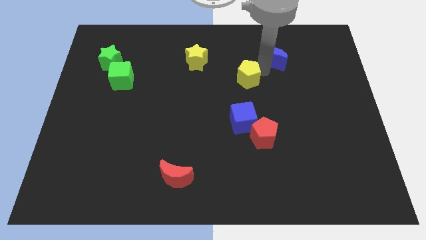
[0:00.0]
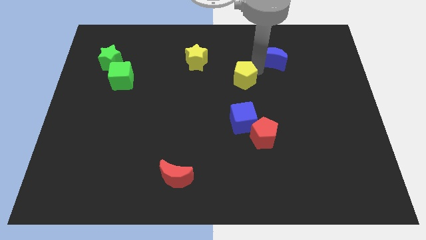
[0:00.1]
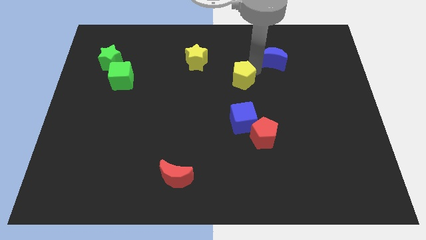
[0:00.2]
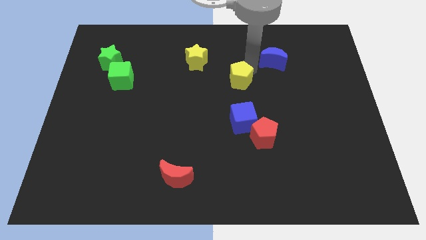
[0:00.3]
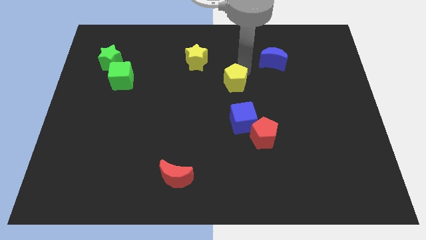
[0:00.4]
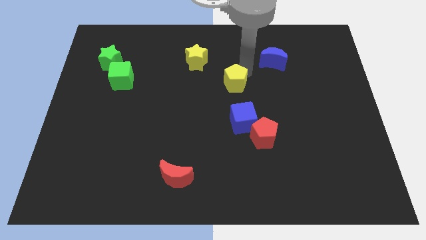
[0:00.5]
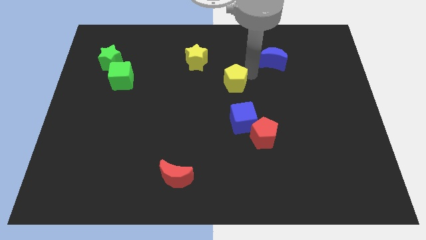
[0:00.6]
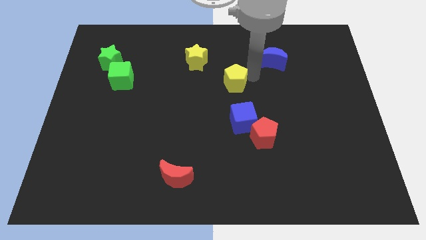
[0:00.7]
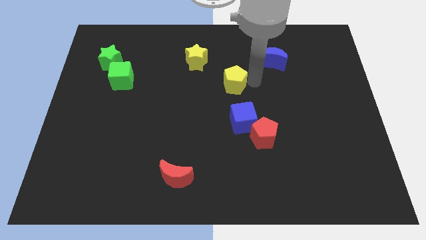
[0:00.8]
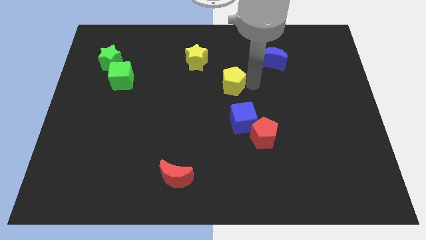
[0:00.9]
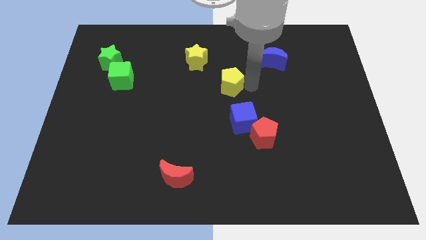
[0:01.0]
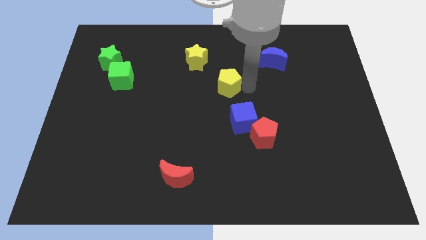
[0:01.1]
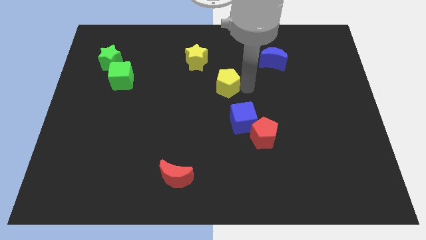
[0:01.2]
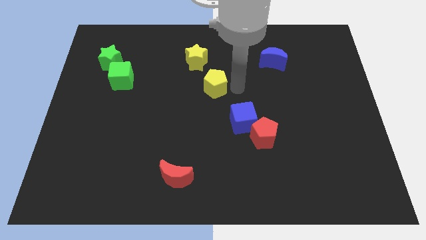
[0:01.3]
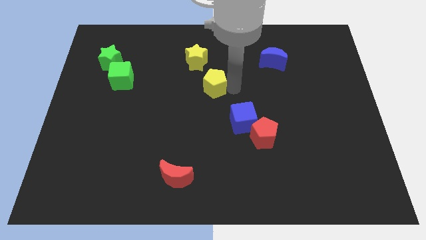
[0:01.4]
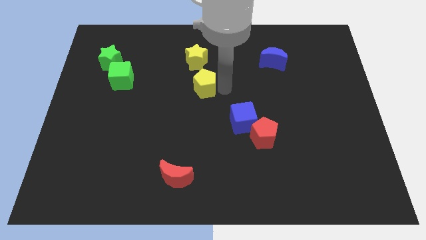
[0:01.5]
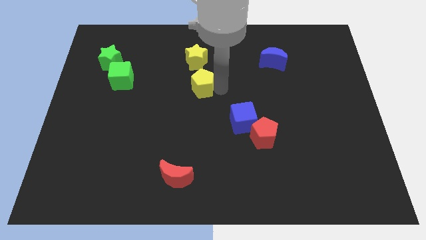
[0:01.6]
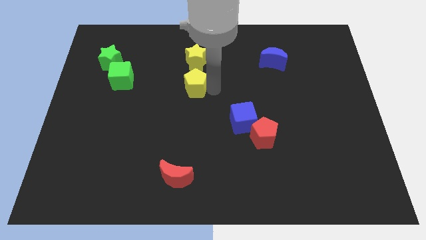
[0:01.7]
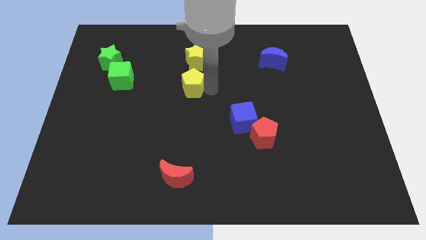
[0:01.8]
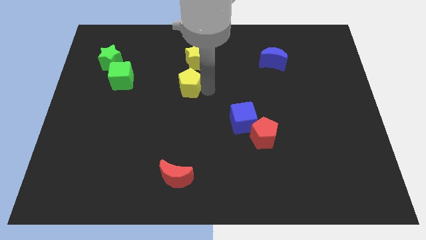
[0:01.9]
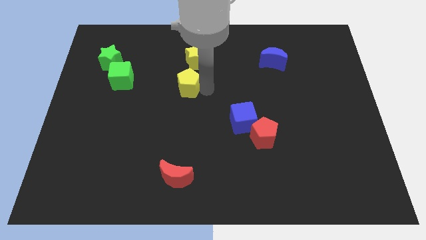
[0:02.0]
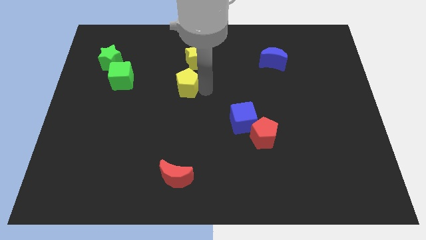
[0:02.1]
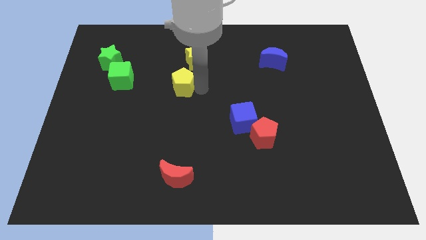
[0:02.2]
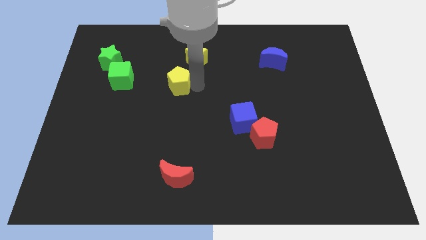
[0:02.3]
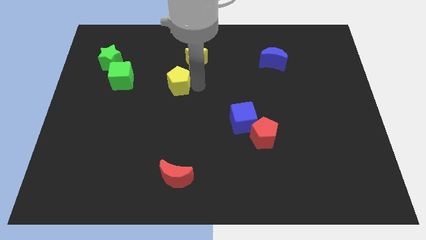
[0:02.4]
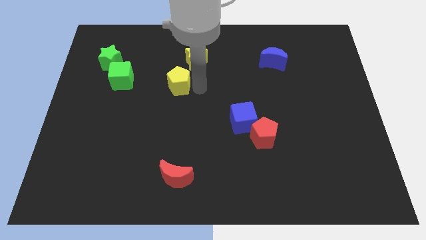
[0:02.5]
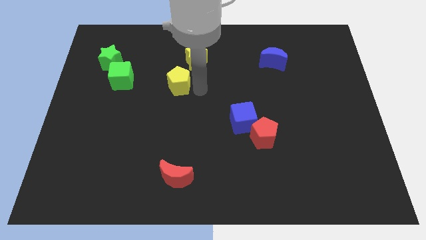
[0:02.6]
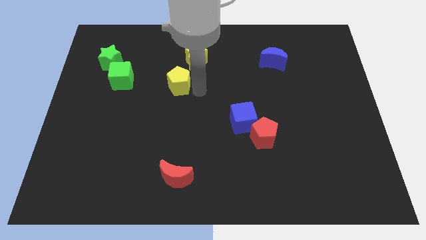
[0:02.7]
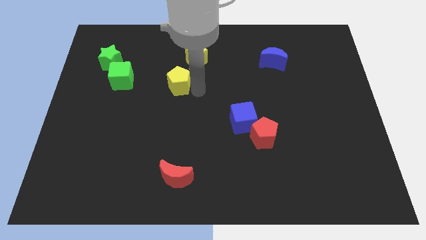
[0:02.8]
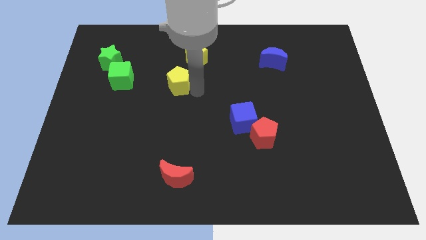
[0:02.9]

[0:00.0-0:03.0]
move yellow pentagon to the left

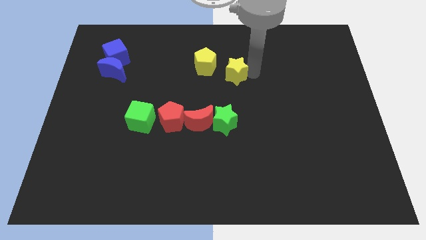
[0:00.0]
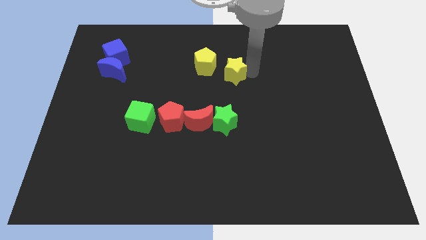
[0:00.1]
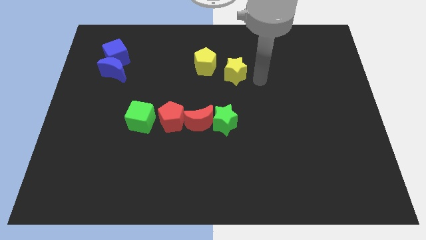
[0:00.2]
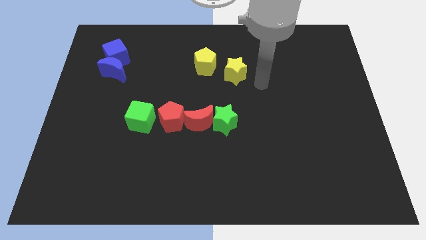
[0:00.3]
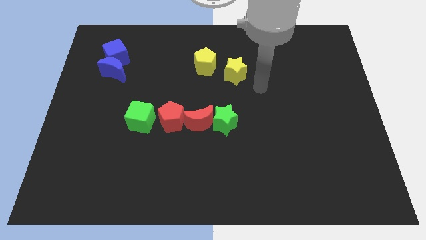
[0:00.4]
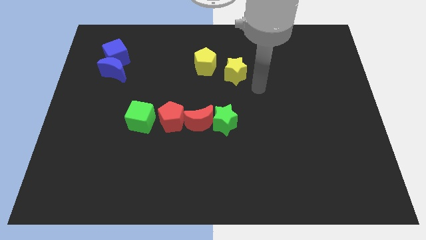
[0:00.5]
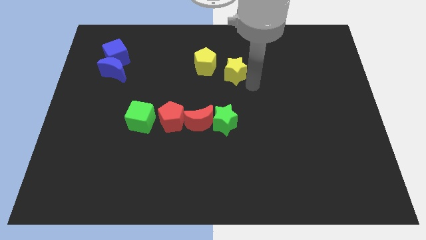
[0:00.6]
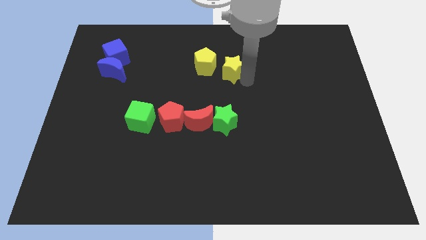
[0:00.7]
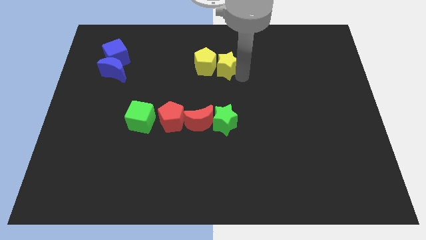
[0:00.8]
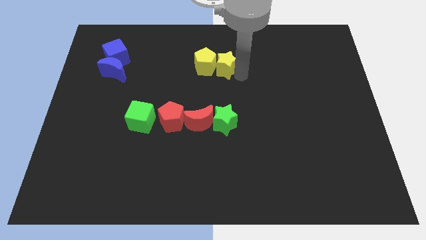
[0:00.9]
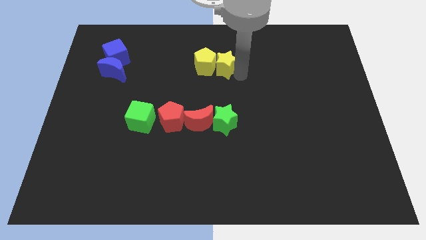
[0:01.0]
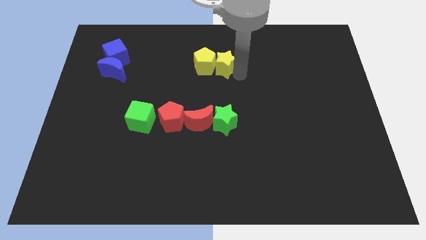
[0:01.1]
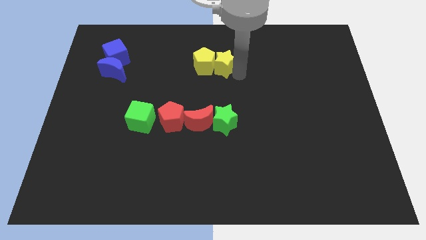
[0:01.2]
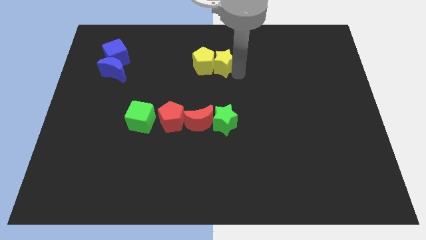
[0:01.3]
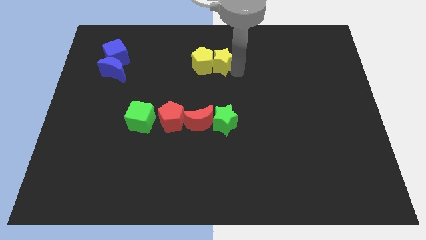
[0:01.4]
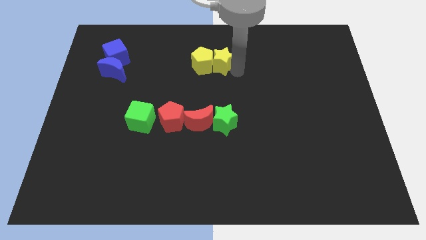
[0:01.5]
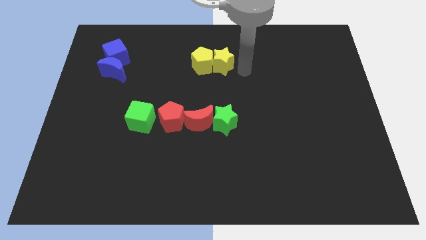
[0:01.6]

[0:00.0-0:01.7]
push the yellow star into the yellow pentagon

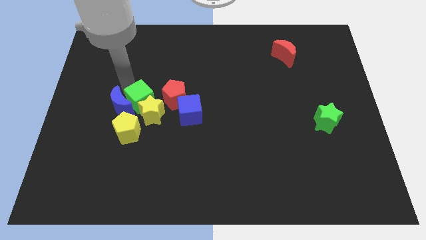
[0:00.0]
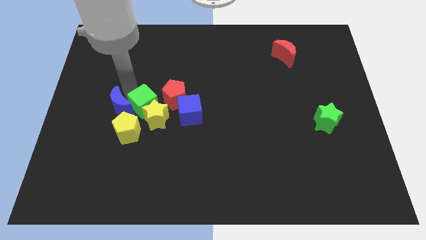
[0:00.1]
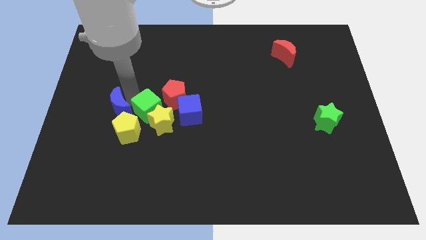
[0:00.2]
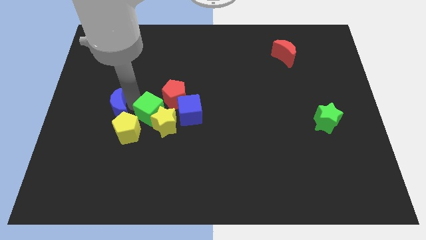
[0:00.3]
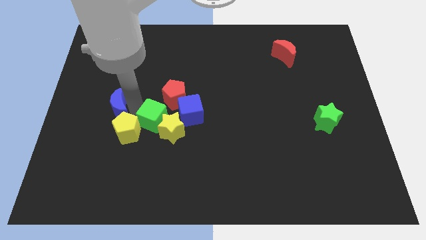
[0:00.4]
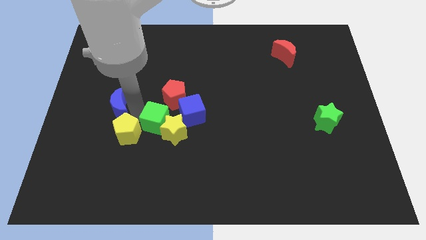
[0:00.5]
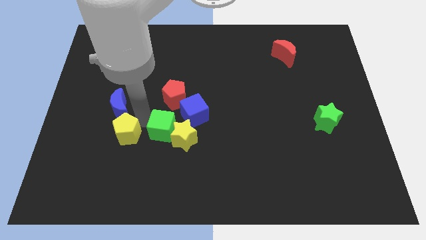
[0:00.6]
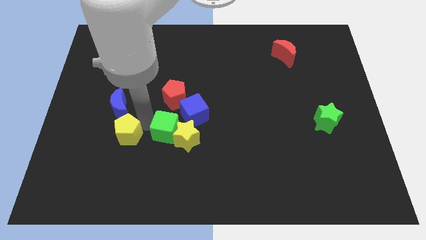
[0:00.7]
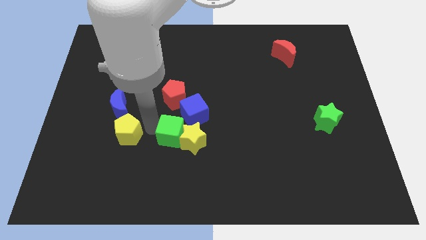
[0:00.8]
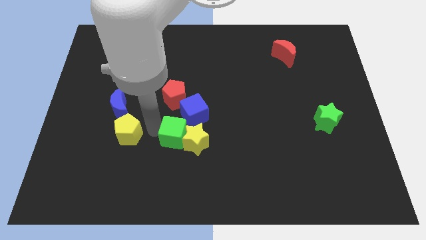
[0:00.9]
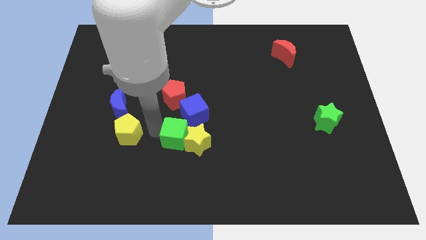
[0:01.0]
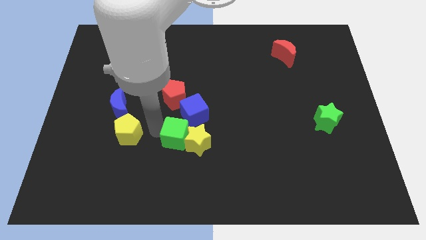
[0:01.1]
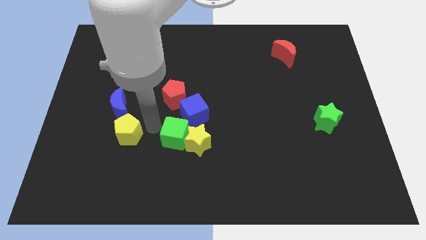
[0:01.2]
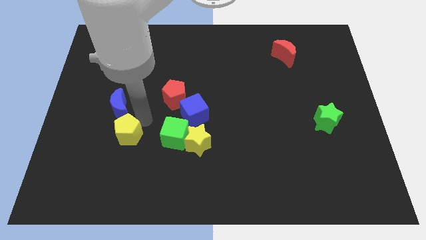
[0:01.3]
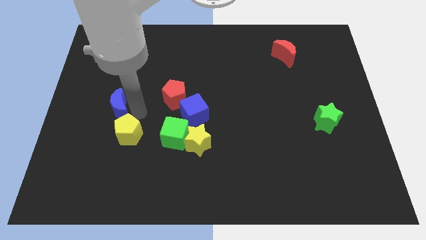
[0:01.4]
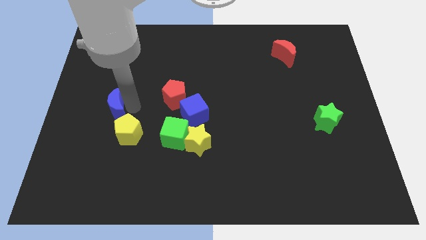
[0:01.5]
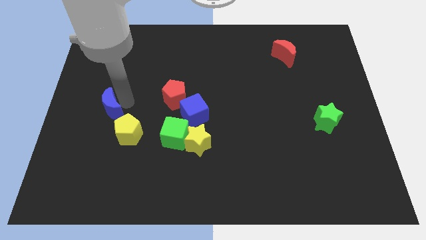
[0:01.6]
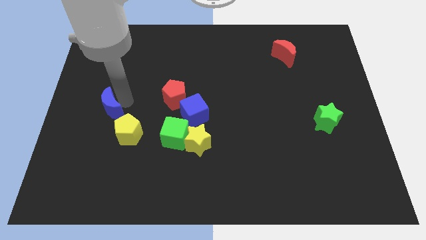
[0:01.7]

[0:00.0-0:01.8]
push a group of blocks to the center

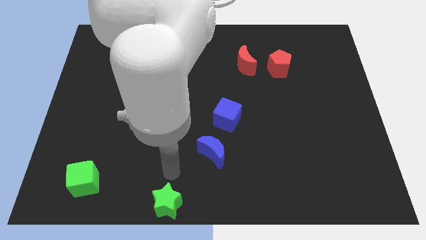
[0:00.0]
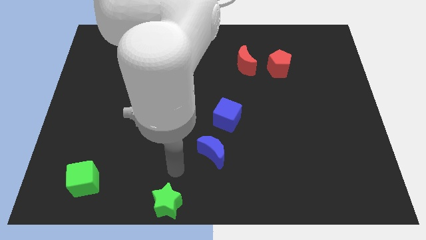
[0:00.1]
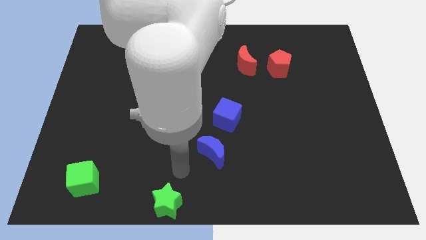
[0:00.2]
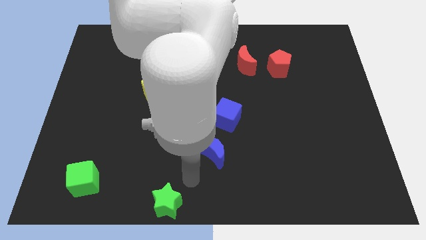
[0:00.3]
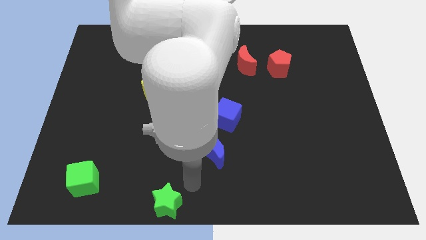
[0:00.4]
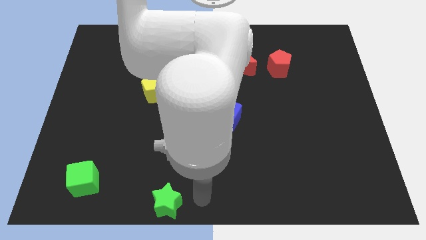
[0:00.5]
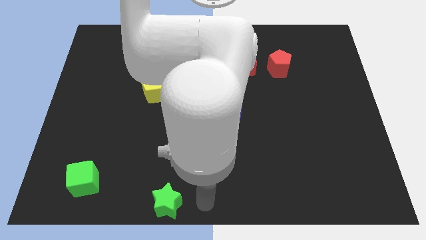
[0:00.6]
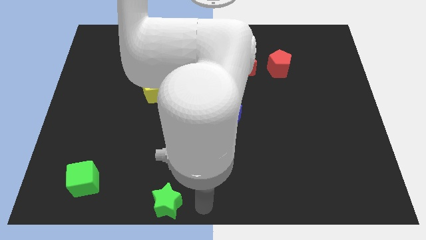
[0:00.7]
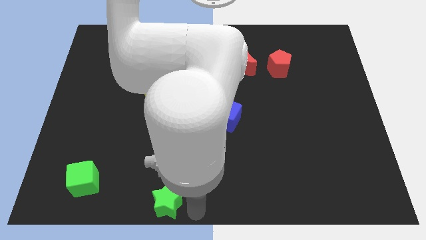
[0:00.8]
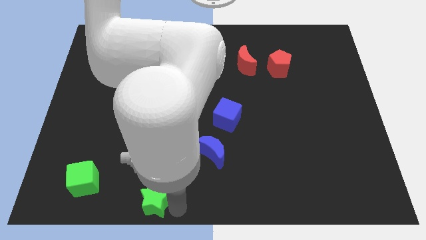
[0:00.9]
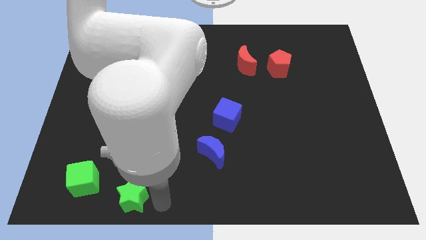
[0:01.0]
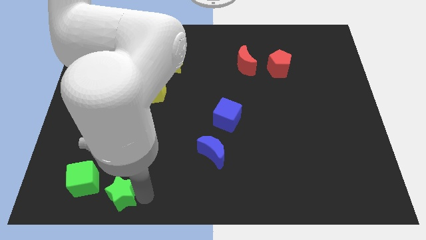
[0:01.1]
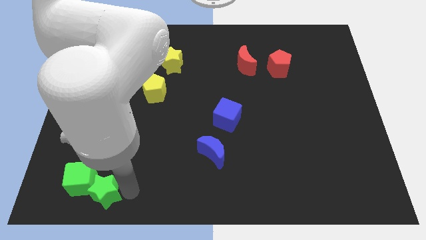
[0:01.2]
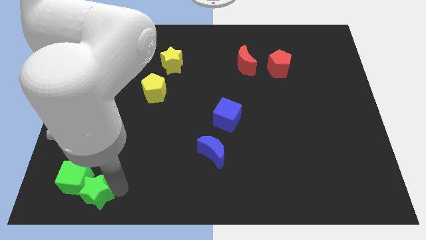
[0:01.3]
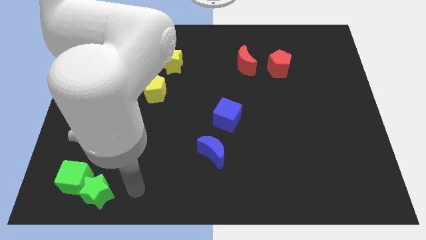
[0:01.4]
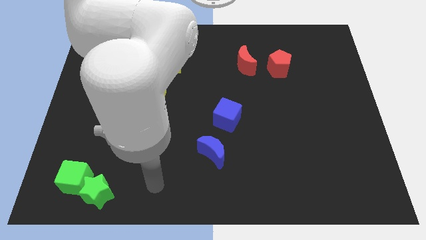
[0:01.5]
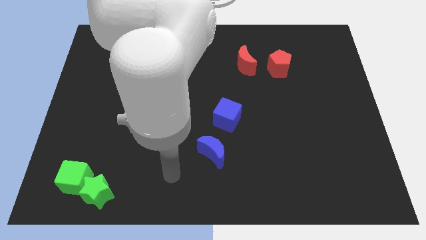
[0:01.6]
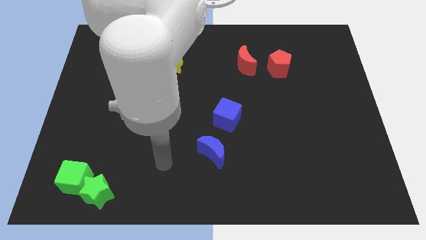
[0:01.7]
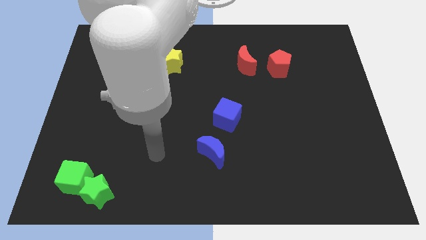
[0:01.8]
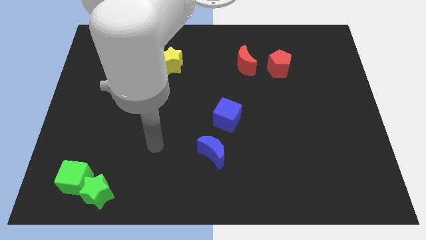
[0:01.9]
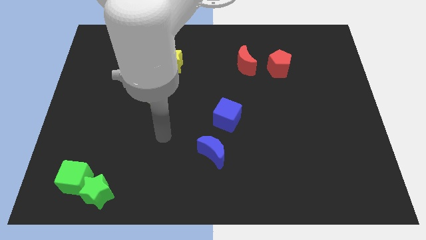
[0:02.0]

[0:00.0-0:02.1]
slide green star into green cube

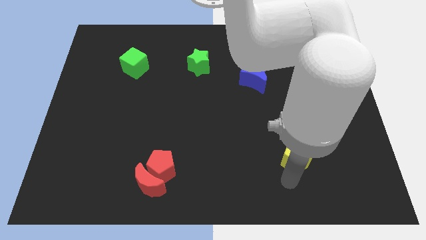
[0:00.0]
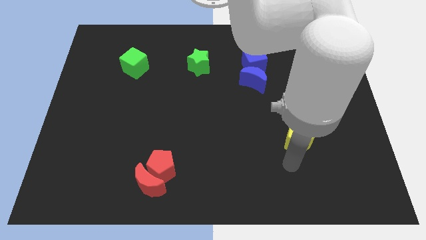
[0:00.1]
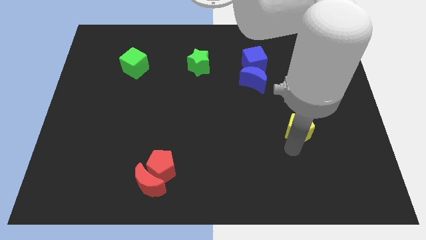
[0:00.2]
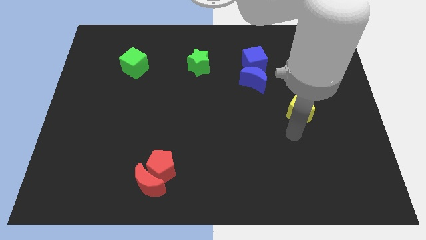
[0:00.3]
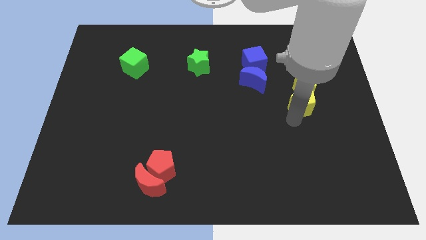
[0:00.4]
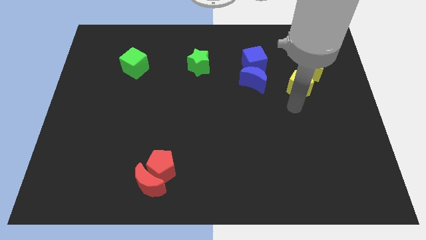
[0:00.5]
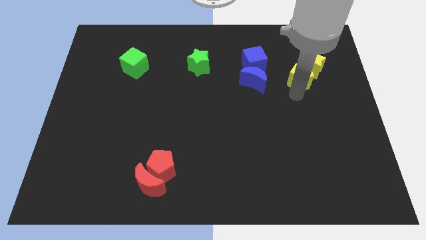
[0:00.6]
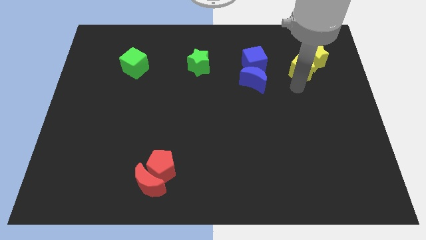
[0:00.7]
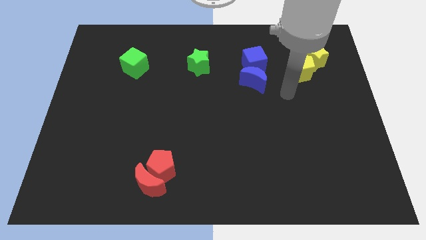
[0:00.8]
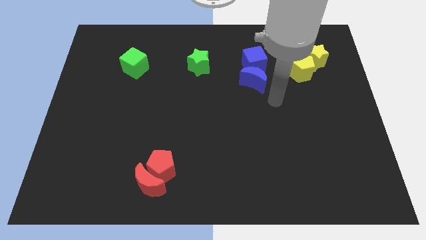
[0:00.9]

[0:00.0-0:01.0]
push the yellow pentagon into the yellow star
